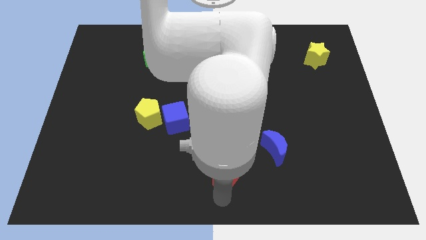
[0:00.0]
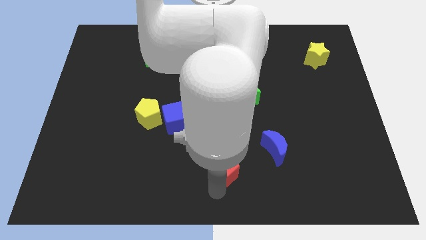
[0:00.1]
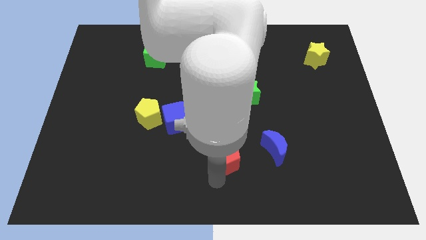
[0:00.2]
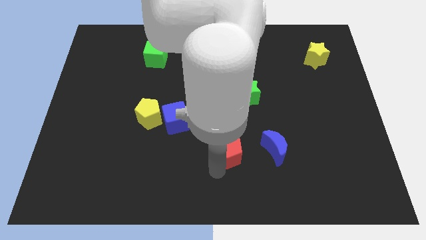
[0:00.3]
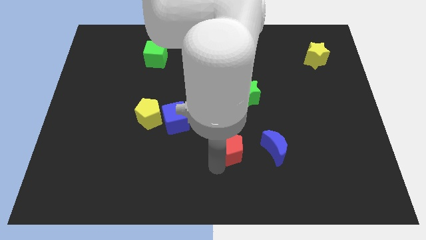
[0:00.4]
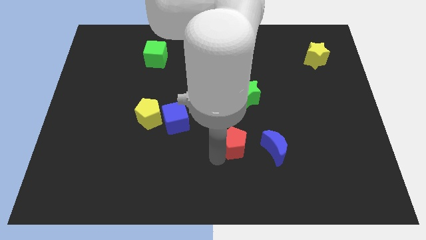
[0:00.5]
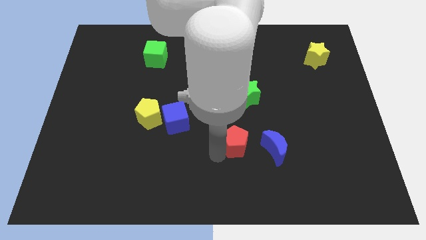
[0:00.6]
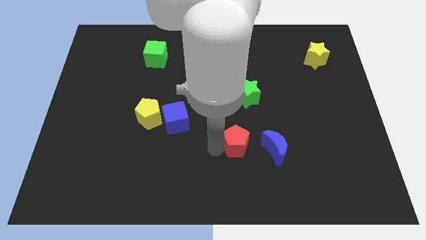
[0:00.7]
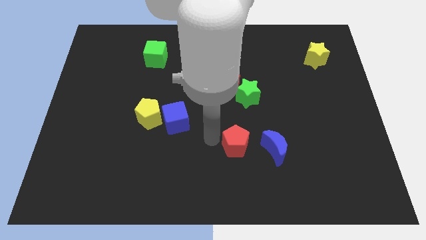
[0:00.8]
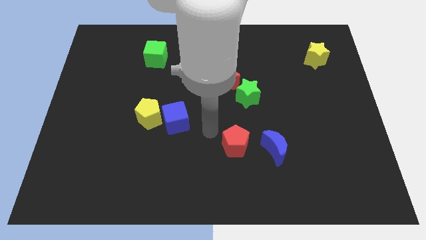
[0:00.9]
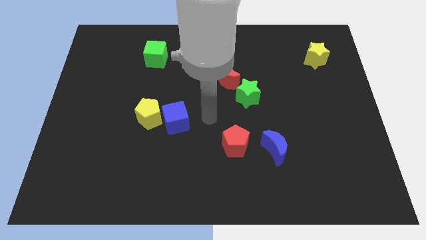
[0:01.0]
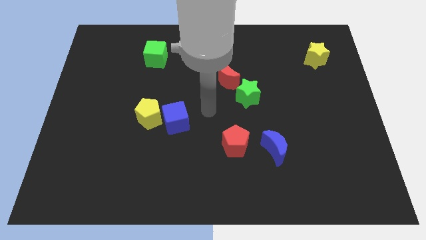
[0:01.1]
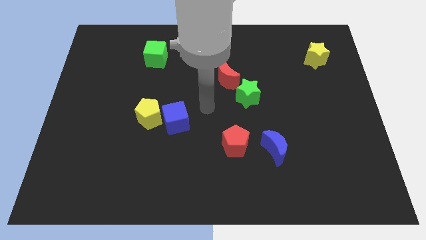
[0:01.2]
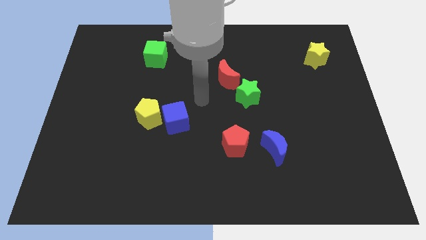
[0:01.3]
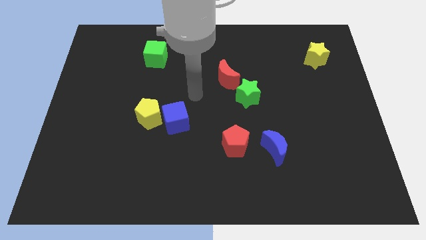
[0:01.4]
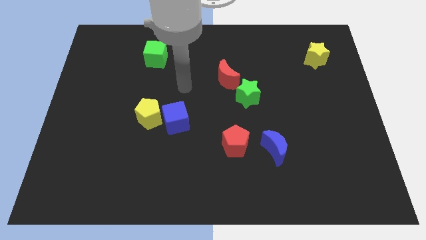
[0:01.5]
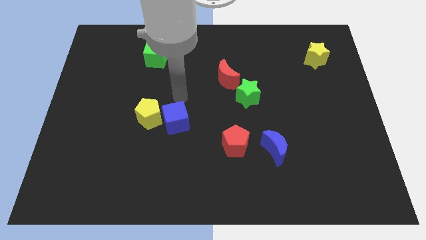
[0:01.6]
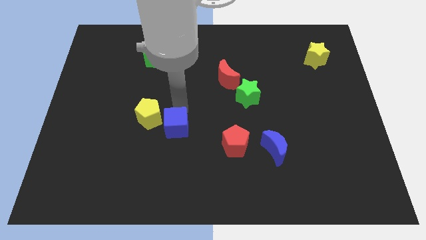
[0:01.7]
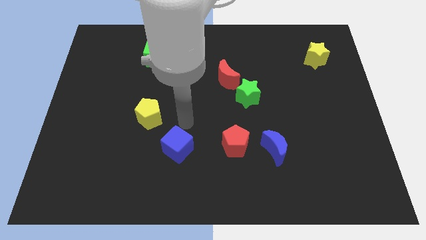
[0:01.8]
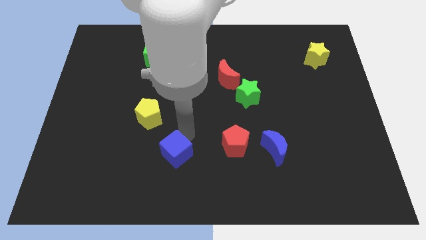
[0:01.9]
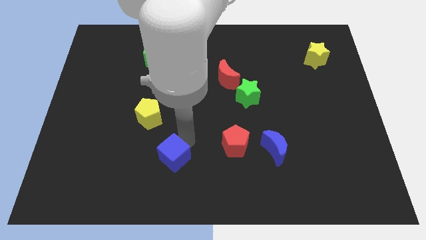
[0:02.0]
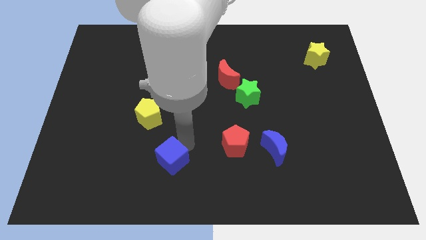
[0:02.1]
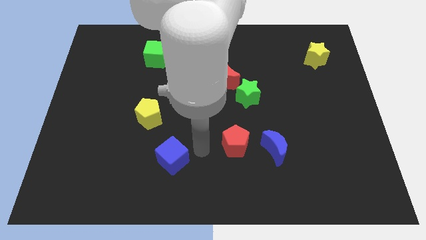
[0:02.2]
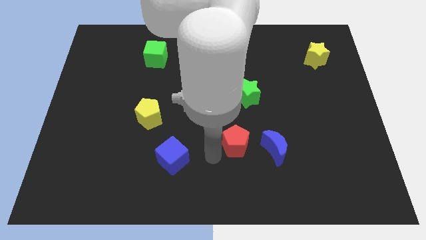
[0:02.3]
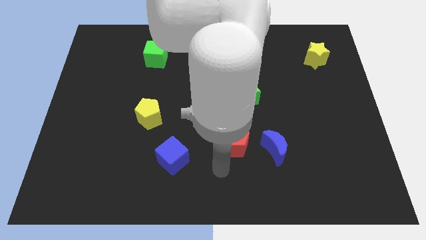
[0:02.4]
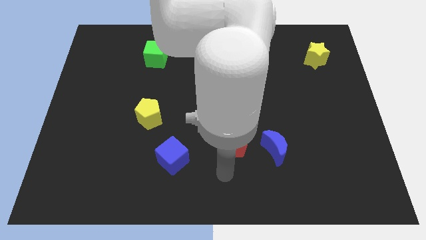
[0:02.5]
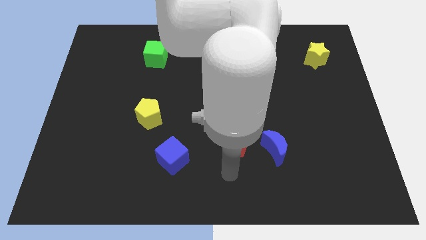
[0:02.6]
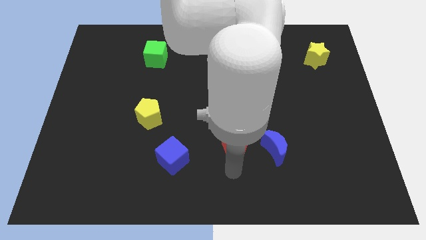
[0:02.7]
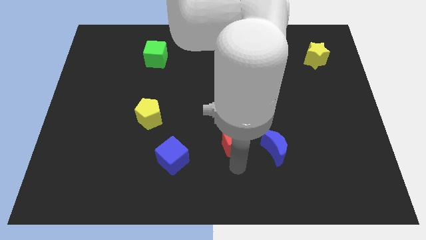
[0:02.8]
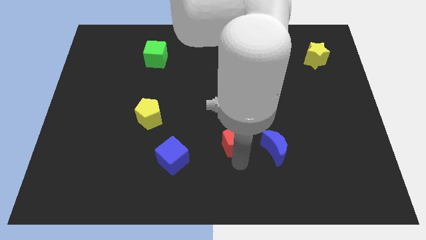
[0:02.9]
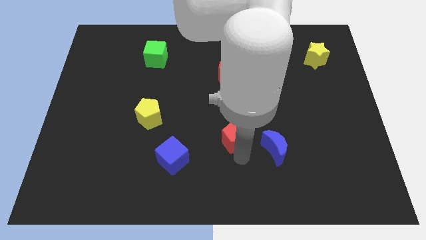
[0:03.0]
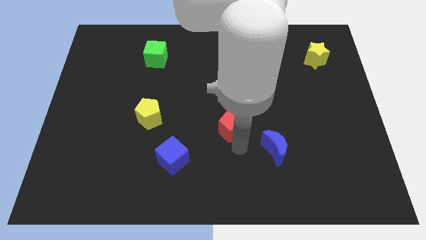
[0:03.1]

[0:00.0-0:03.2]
separate blue cube from the yellow pentagon

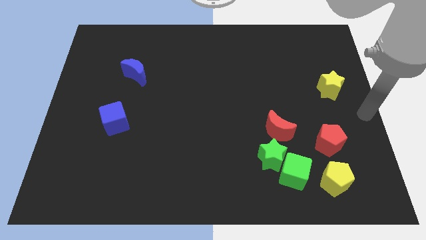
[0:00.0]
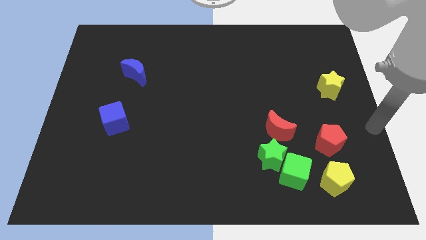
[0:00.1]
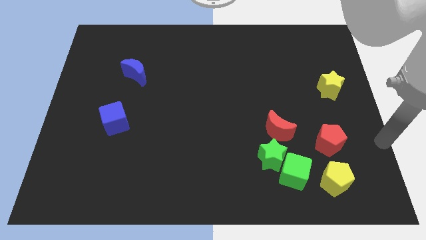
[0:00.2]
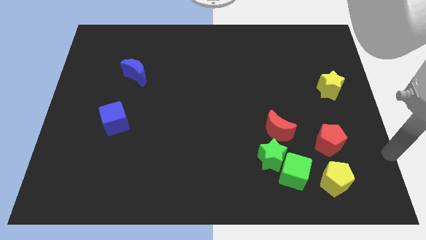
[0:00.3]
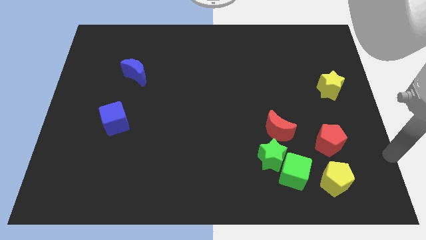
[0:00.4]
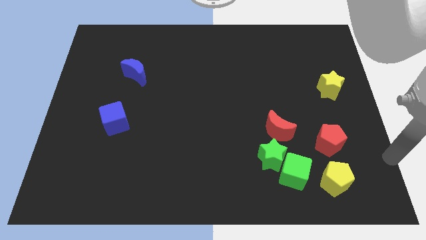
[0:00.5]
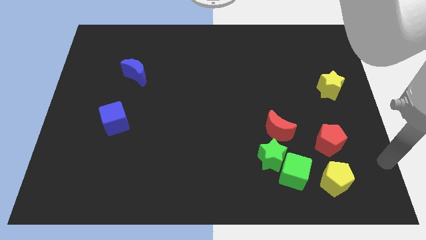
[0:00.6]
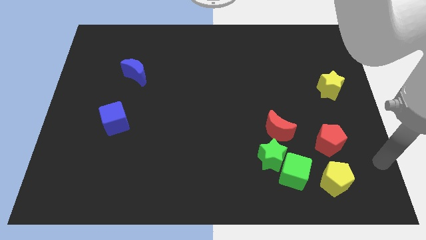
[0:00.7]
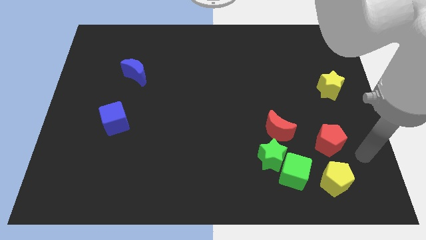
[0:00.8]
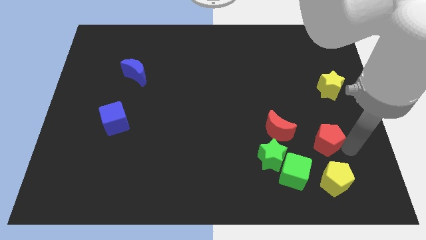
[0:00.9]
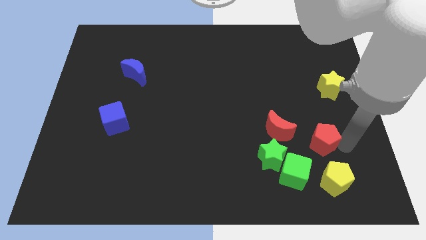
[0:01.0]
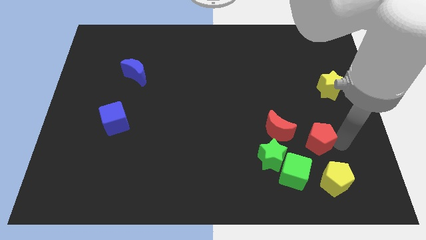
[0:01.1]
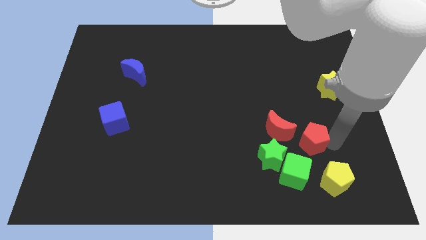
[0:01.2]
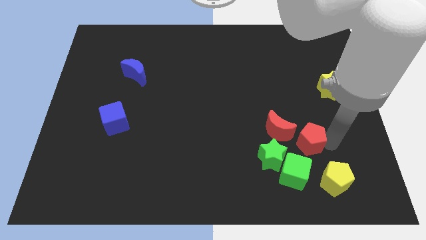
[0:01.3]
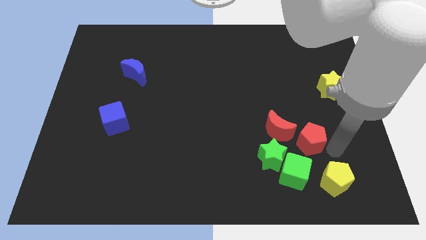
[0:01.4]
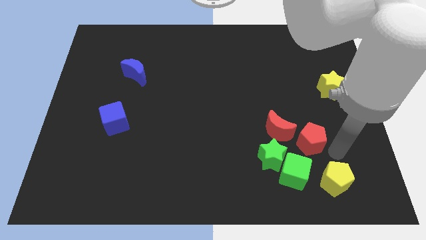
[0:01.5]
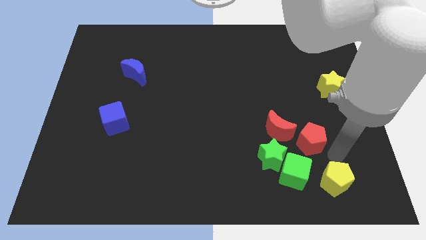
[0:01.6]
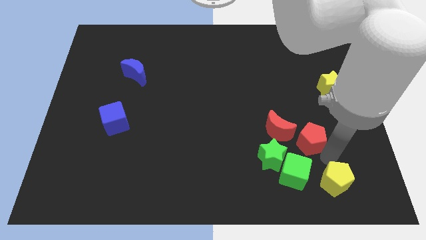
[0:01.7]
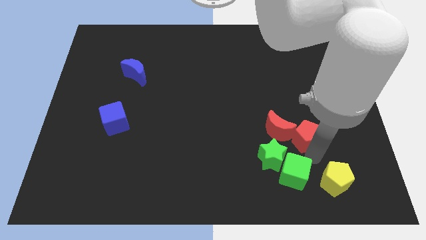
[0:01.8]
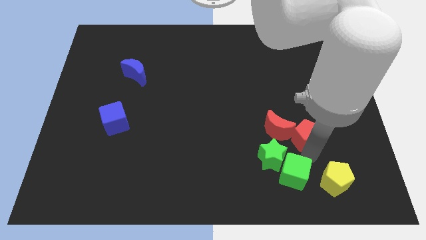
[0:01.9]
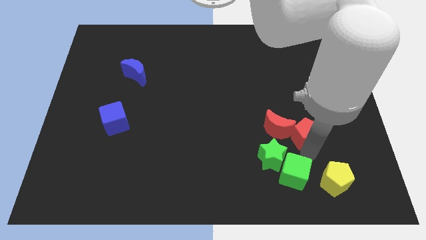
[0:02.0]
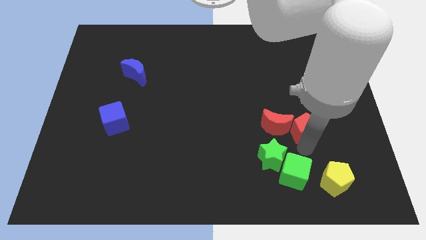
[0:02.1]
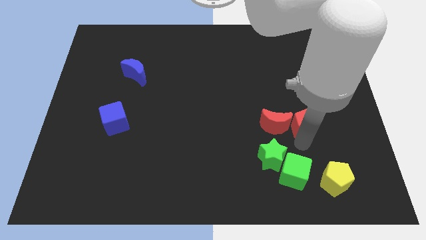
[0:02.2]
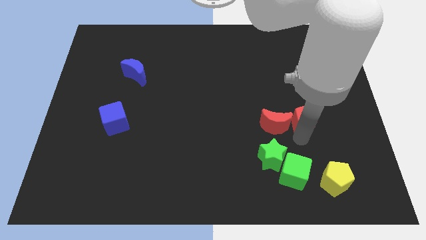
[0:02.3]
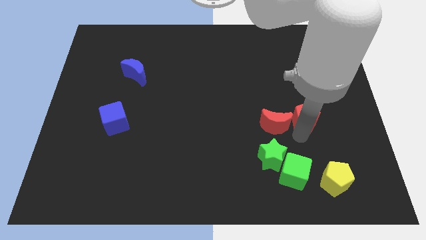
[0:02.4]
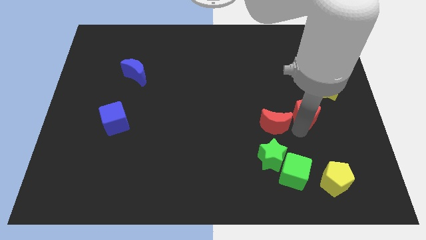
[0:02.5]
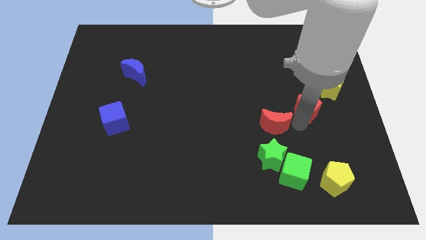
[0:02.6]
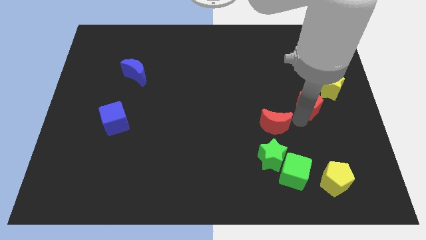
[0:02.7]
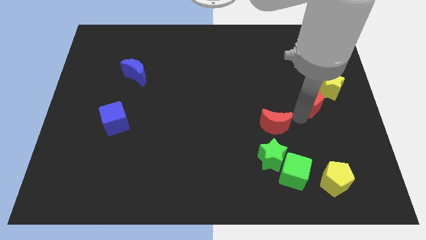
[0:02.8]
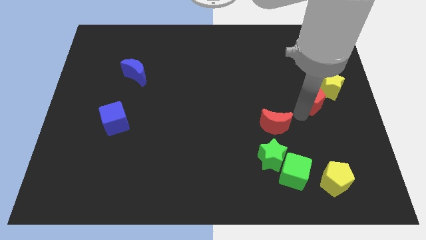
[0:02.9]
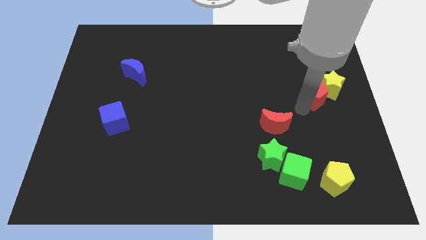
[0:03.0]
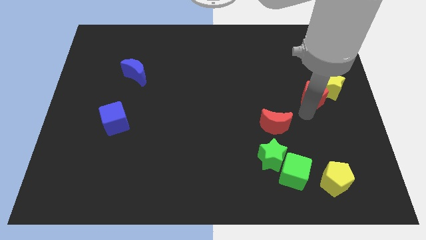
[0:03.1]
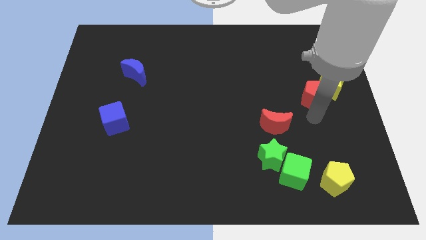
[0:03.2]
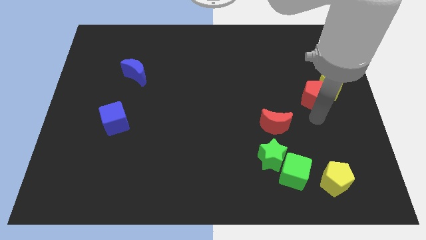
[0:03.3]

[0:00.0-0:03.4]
push the red pentagon close to the yellow star

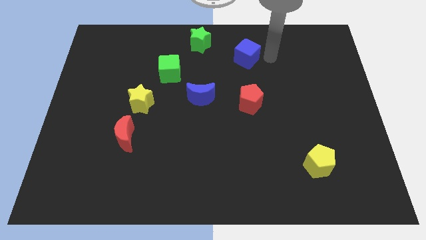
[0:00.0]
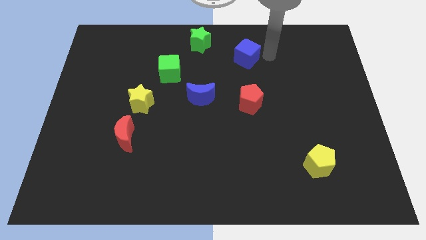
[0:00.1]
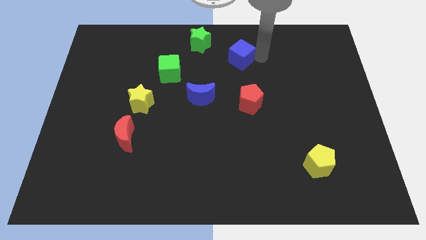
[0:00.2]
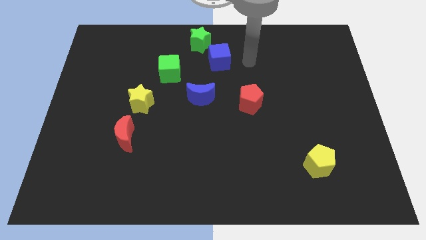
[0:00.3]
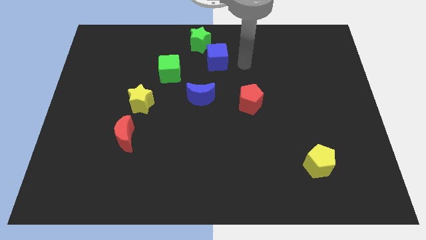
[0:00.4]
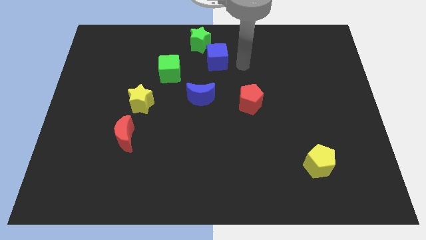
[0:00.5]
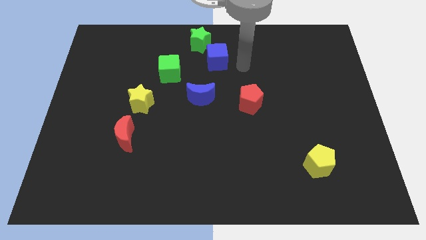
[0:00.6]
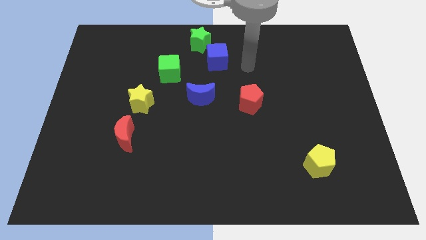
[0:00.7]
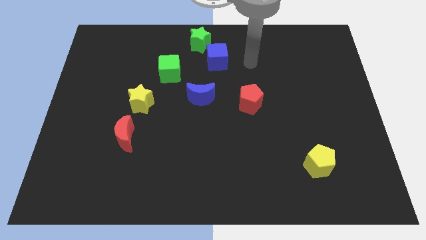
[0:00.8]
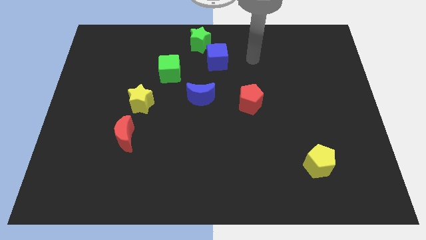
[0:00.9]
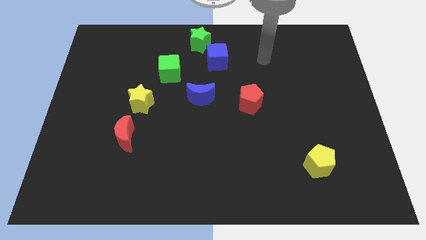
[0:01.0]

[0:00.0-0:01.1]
push blue cube to the right of the green cube

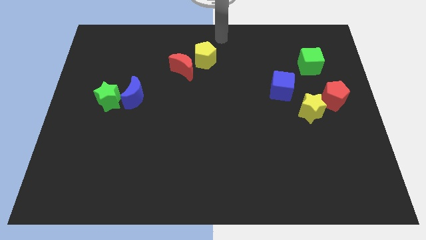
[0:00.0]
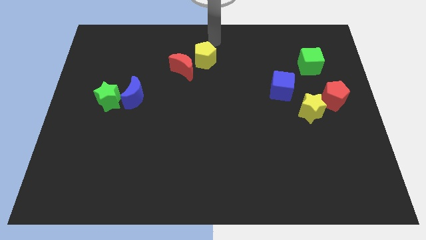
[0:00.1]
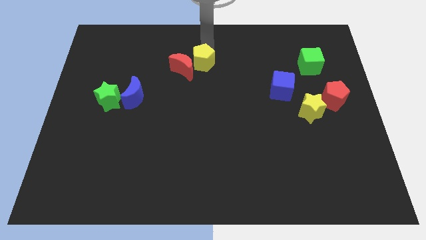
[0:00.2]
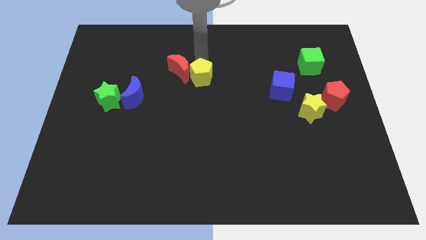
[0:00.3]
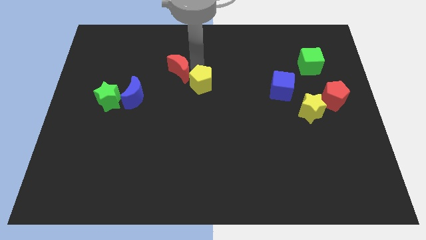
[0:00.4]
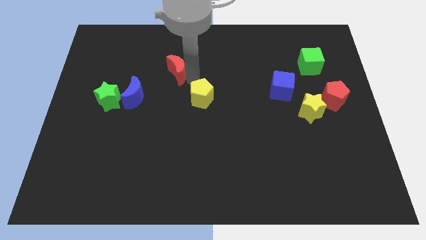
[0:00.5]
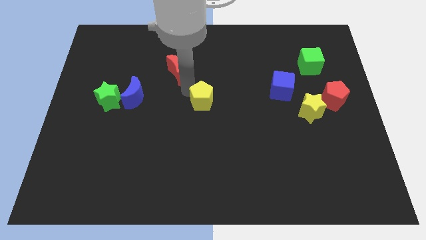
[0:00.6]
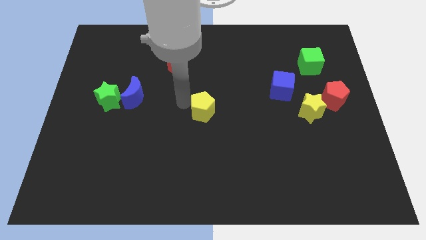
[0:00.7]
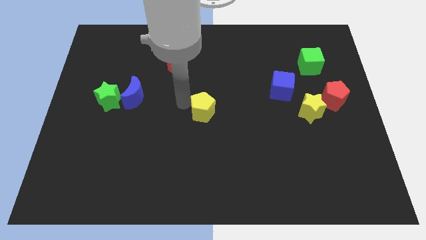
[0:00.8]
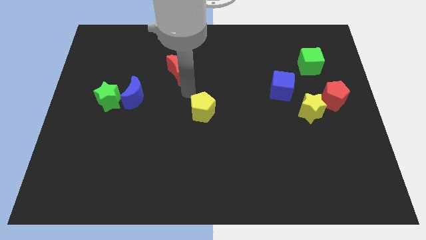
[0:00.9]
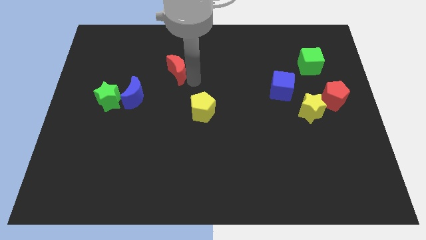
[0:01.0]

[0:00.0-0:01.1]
separate yellow pentagon and red moon from each other
